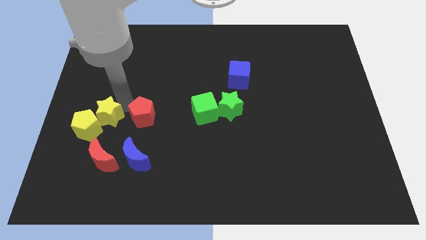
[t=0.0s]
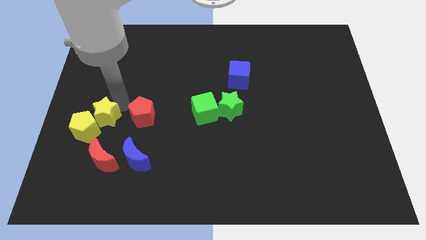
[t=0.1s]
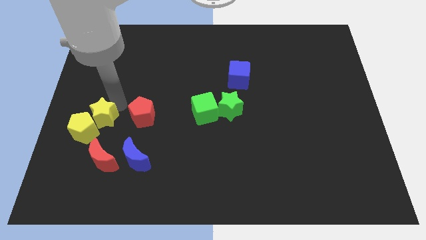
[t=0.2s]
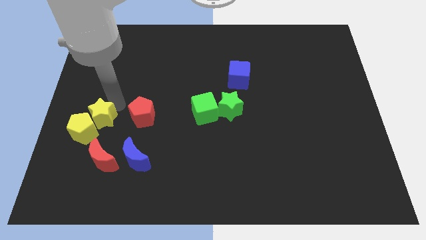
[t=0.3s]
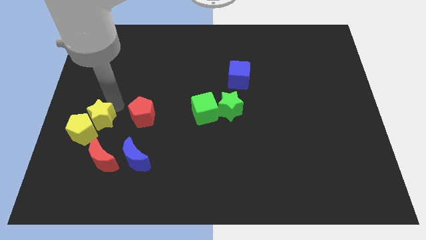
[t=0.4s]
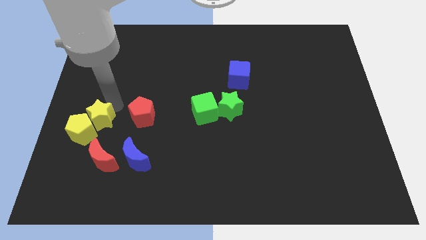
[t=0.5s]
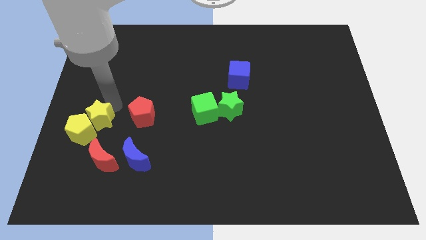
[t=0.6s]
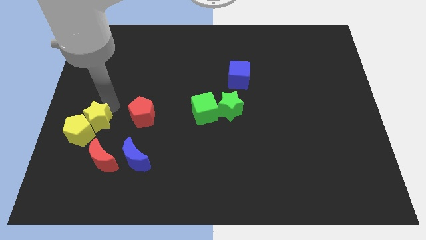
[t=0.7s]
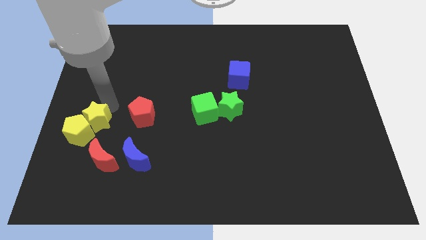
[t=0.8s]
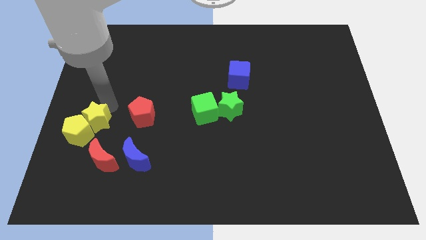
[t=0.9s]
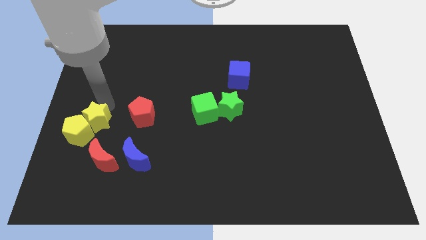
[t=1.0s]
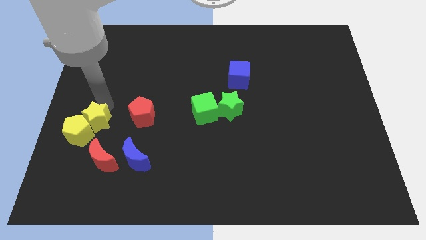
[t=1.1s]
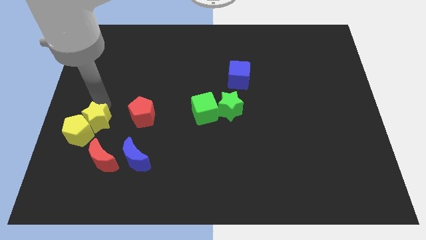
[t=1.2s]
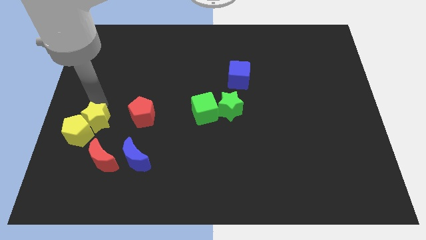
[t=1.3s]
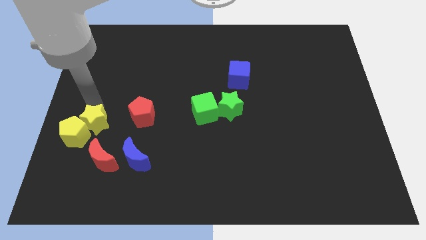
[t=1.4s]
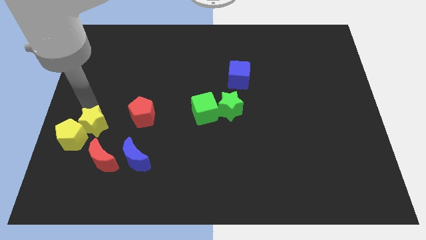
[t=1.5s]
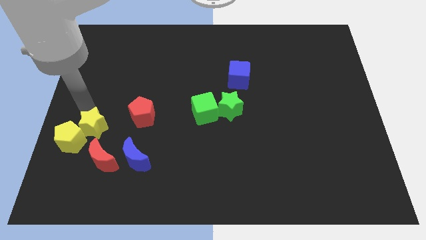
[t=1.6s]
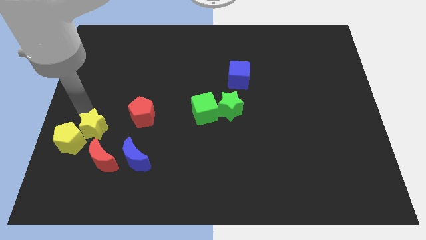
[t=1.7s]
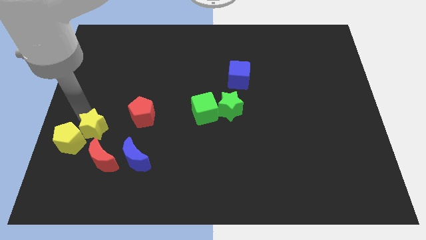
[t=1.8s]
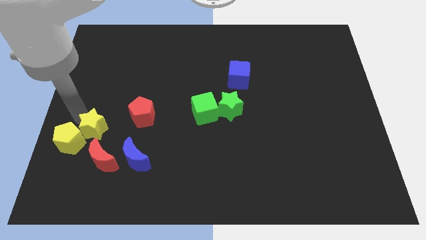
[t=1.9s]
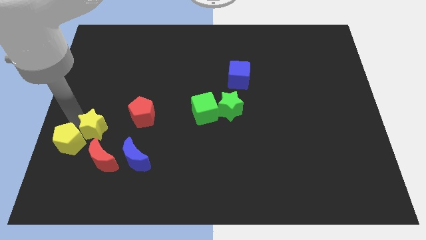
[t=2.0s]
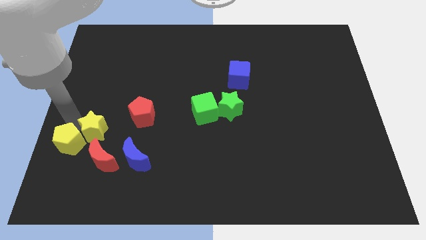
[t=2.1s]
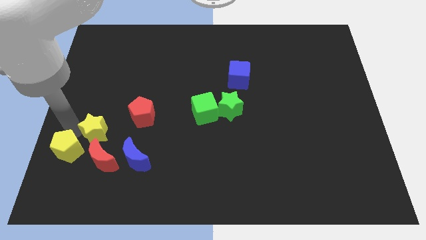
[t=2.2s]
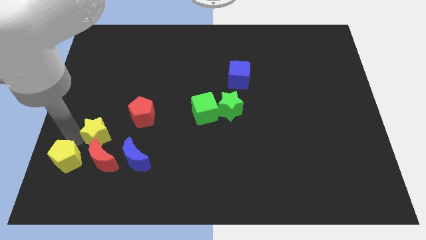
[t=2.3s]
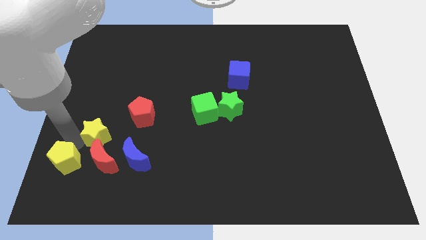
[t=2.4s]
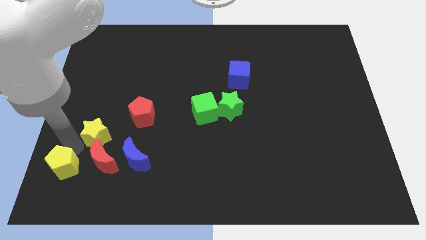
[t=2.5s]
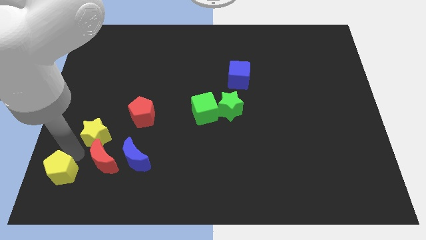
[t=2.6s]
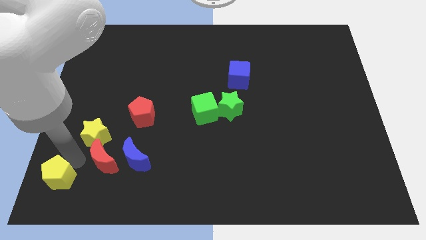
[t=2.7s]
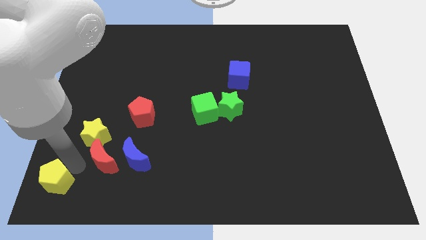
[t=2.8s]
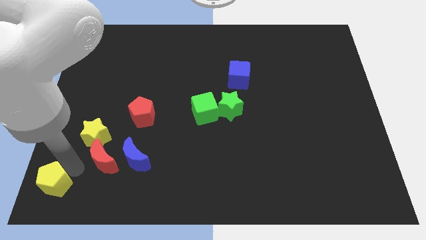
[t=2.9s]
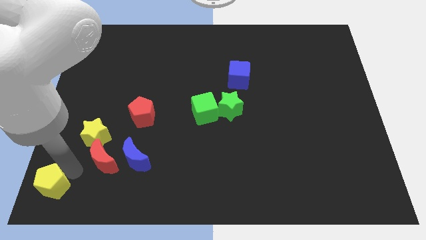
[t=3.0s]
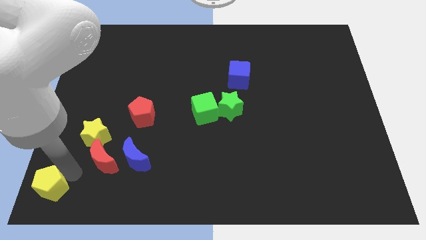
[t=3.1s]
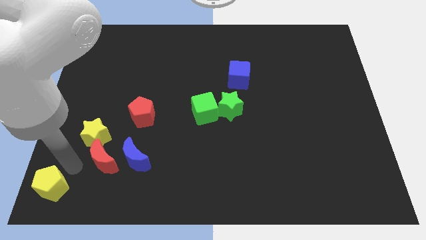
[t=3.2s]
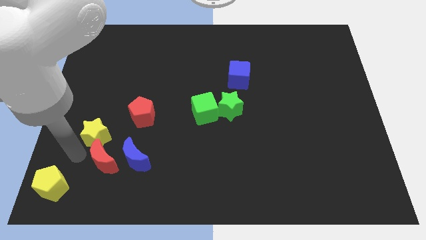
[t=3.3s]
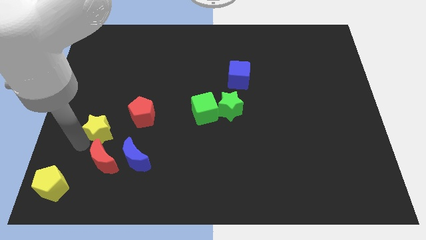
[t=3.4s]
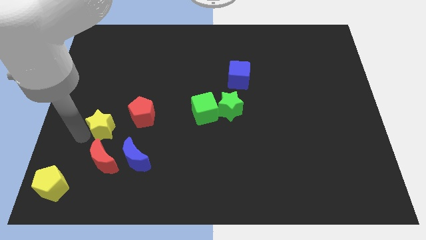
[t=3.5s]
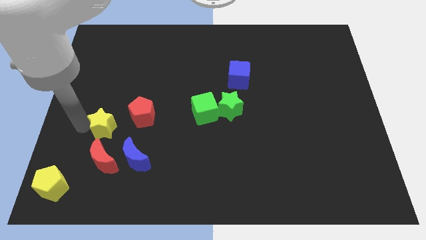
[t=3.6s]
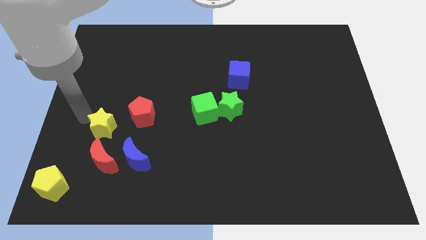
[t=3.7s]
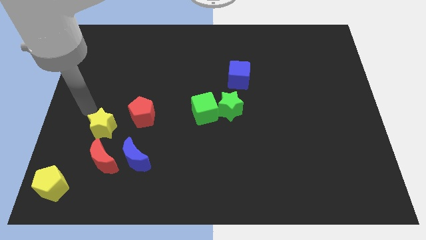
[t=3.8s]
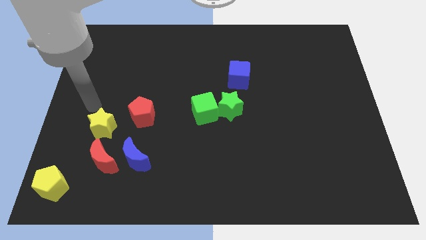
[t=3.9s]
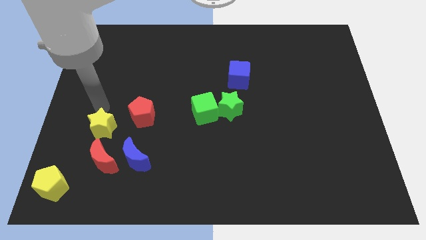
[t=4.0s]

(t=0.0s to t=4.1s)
push the yellow pentagon to the bottom left

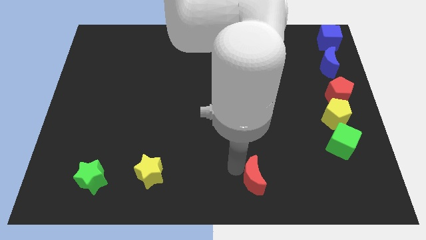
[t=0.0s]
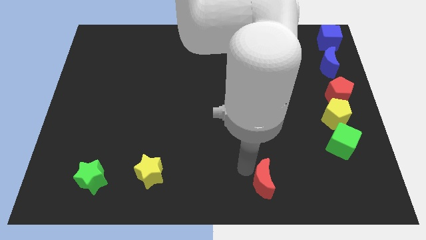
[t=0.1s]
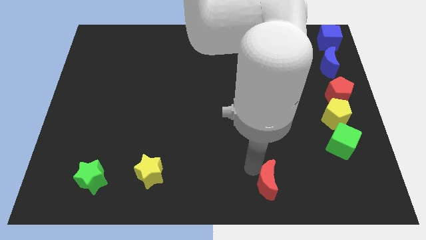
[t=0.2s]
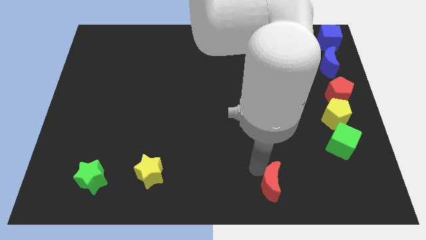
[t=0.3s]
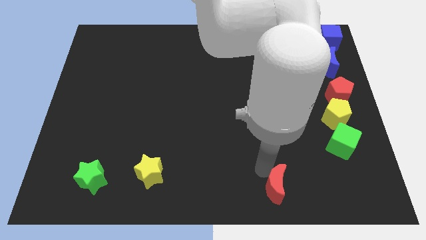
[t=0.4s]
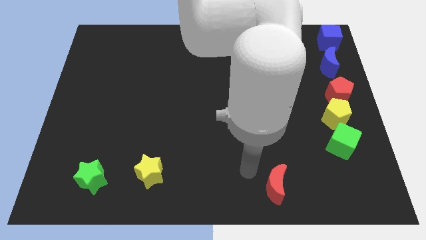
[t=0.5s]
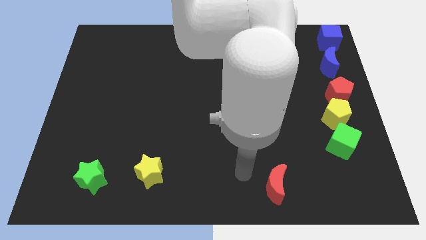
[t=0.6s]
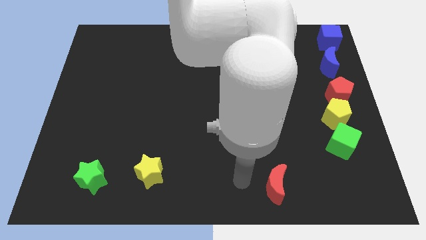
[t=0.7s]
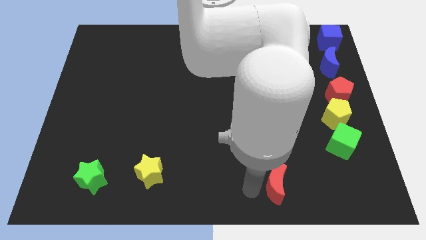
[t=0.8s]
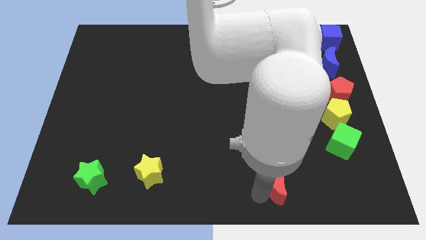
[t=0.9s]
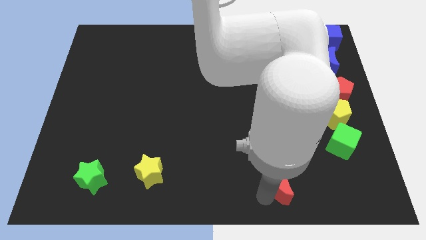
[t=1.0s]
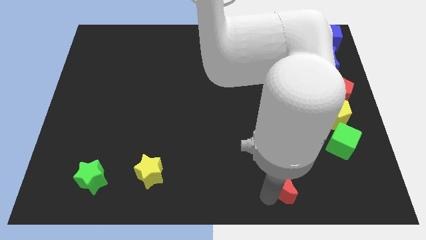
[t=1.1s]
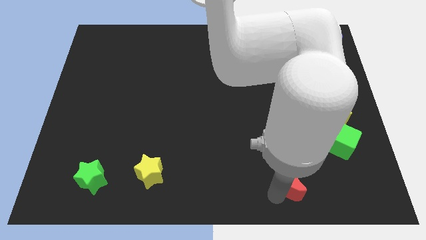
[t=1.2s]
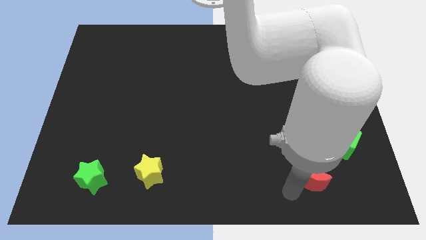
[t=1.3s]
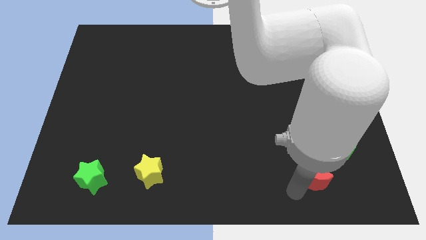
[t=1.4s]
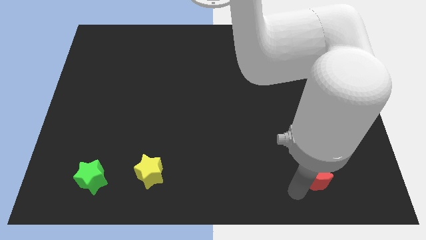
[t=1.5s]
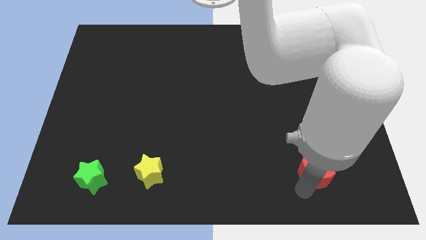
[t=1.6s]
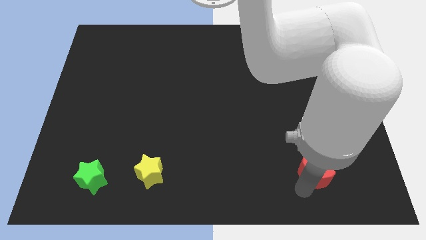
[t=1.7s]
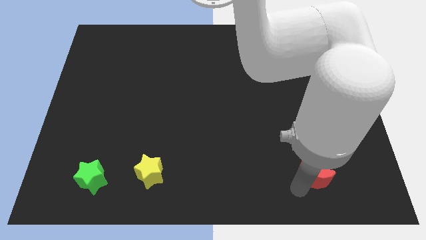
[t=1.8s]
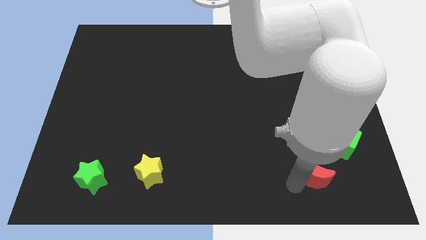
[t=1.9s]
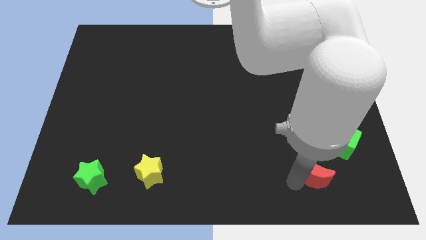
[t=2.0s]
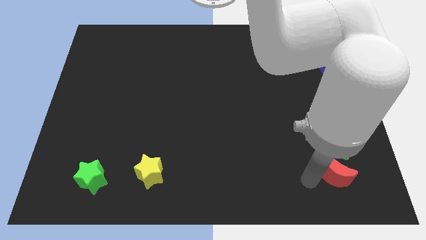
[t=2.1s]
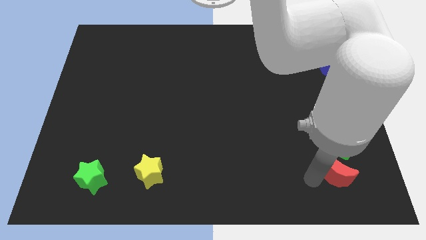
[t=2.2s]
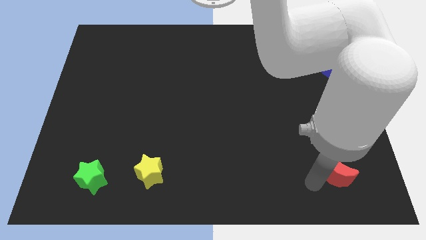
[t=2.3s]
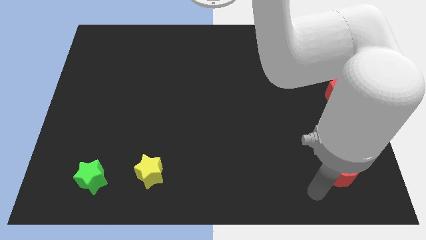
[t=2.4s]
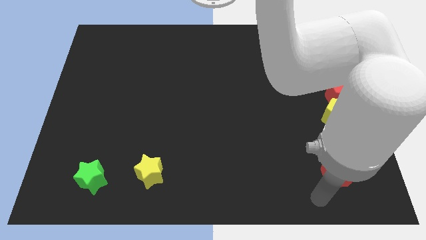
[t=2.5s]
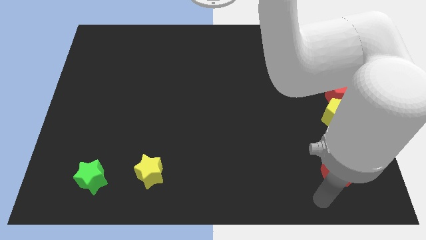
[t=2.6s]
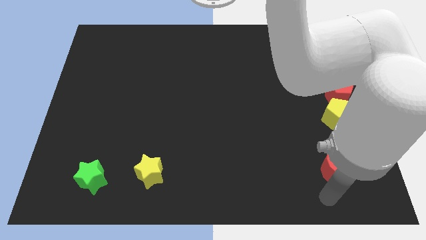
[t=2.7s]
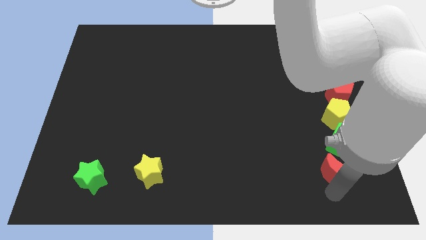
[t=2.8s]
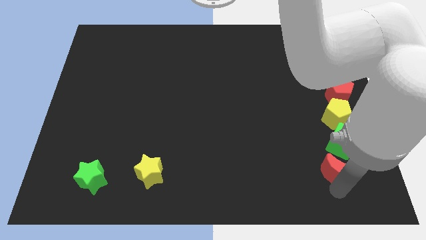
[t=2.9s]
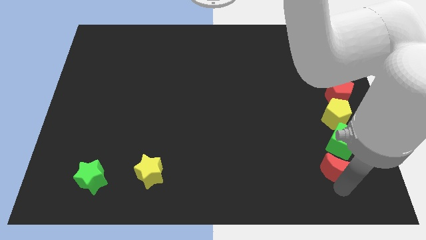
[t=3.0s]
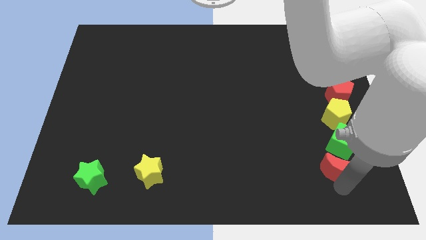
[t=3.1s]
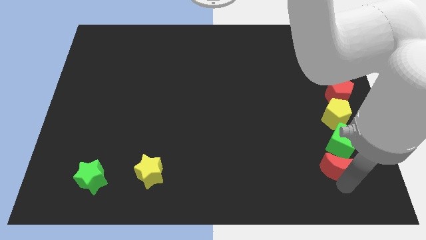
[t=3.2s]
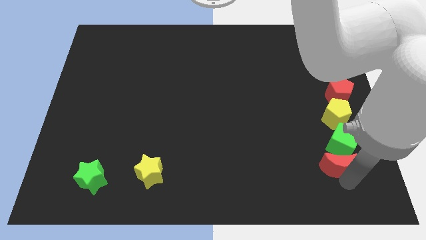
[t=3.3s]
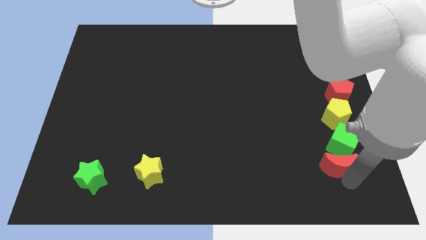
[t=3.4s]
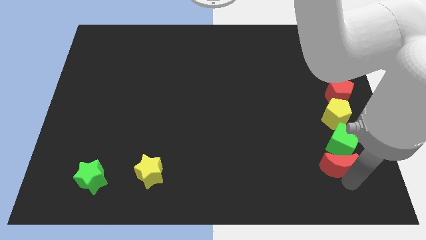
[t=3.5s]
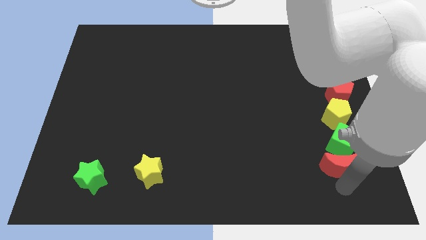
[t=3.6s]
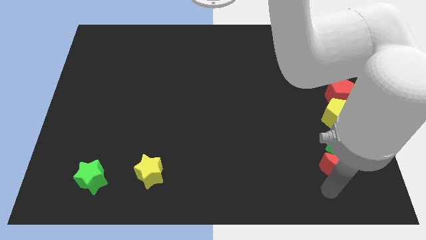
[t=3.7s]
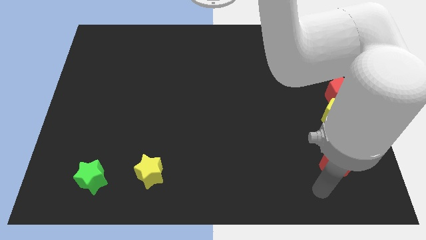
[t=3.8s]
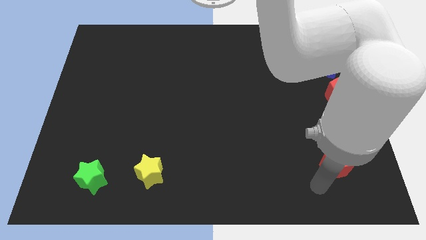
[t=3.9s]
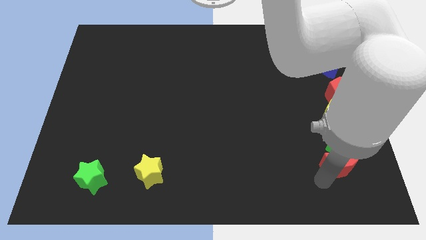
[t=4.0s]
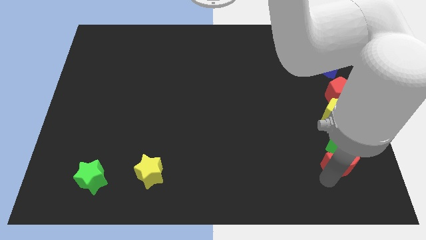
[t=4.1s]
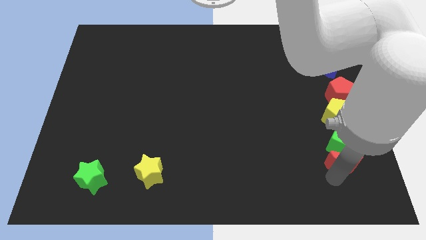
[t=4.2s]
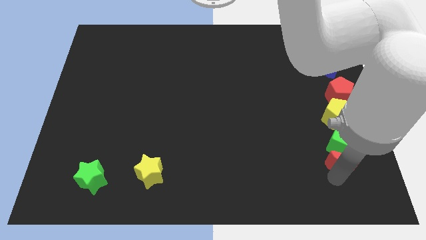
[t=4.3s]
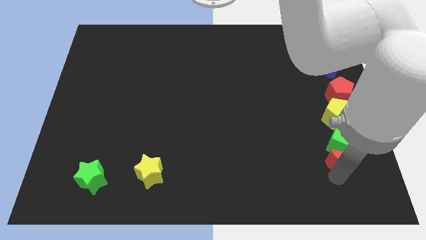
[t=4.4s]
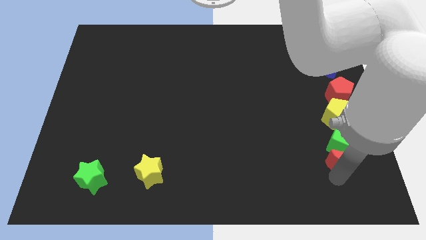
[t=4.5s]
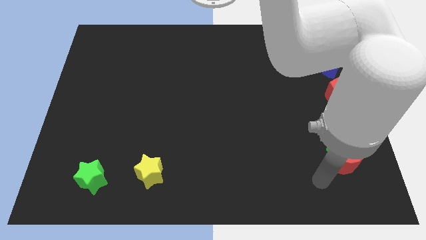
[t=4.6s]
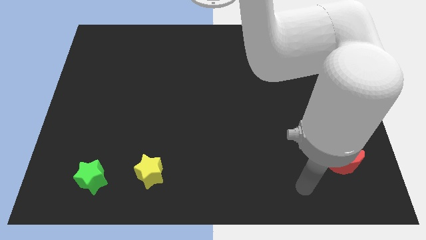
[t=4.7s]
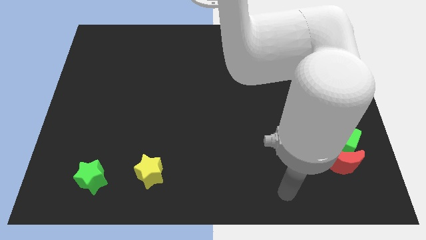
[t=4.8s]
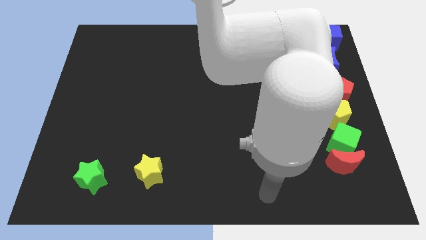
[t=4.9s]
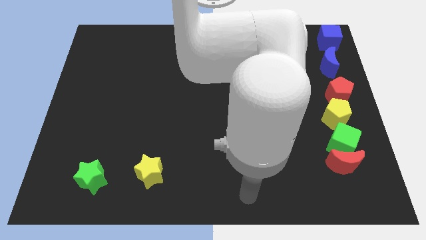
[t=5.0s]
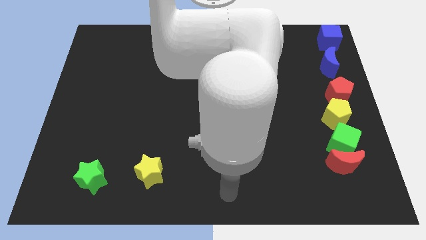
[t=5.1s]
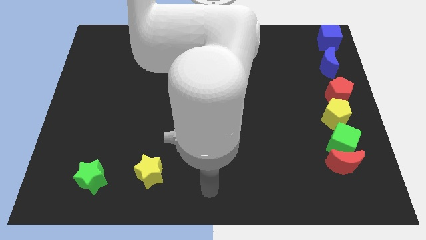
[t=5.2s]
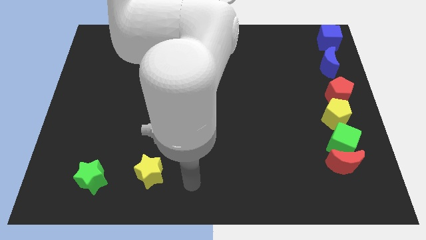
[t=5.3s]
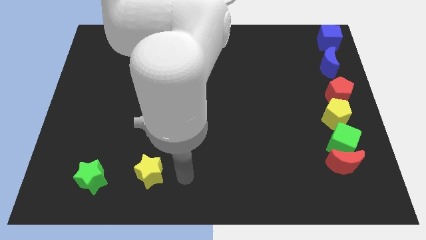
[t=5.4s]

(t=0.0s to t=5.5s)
place the red crescent underneath the green cube
